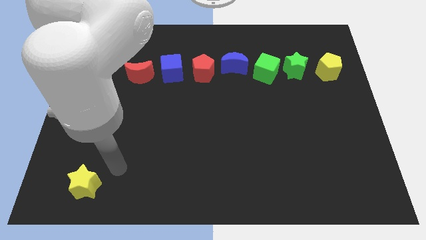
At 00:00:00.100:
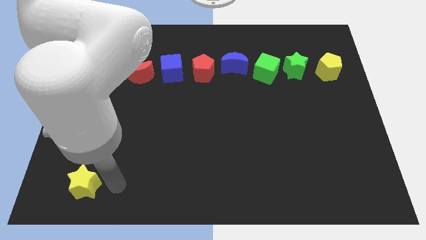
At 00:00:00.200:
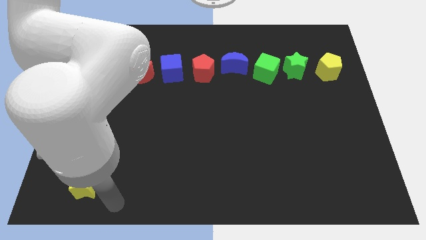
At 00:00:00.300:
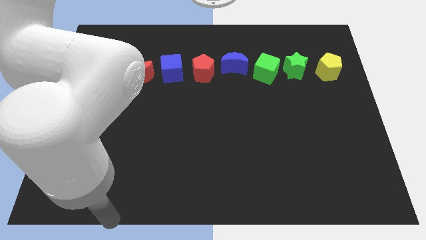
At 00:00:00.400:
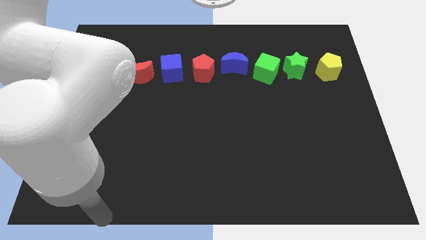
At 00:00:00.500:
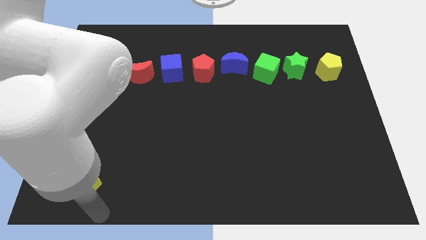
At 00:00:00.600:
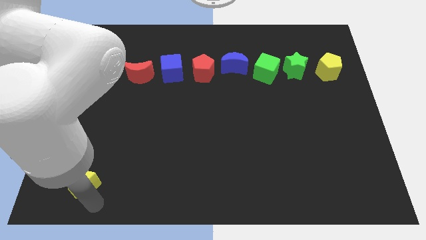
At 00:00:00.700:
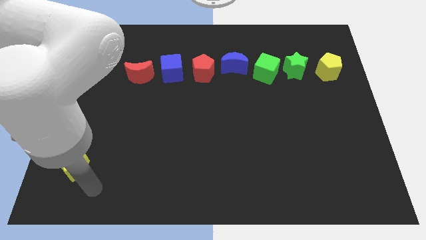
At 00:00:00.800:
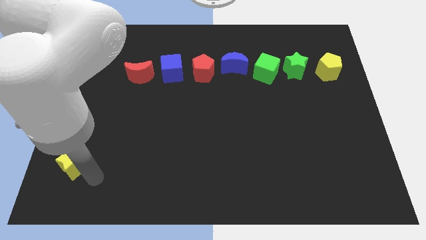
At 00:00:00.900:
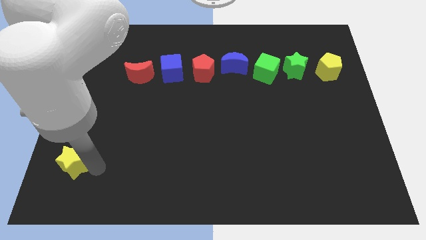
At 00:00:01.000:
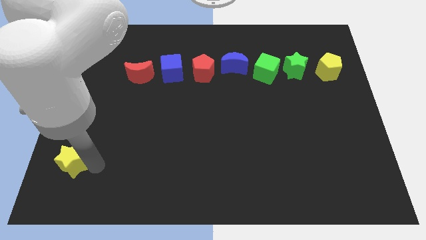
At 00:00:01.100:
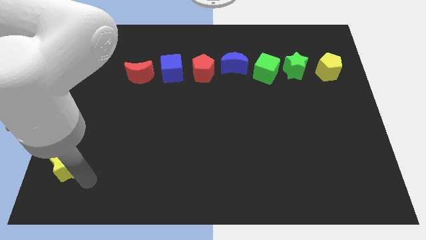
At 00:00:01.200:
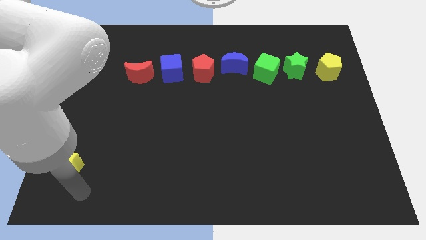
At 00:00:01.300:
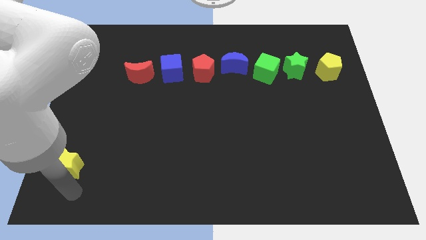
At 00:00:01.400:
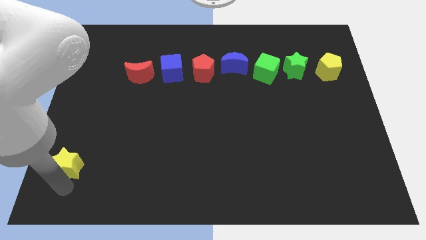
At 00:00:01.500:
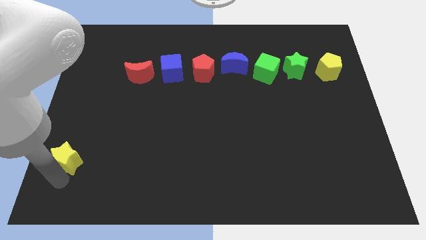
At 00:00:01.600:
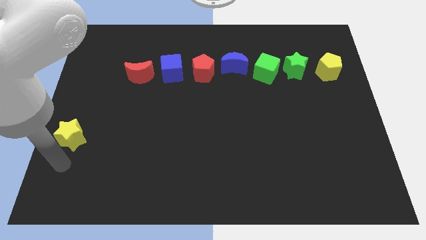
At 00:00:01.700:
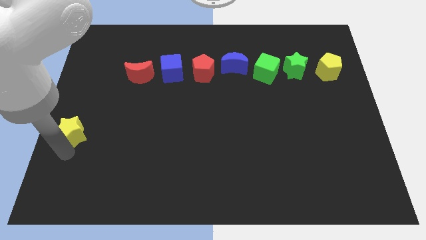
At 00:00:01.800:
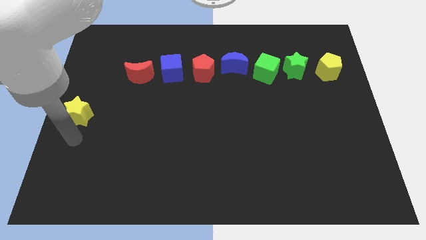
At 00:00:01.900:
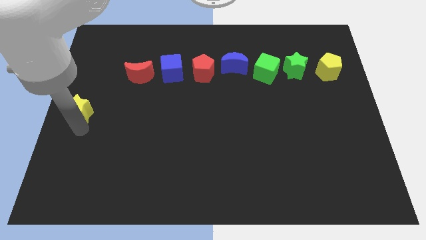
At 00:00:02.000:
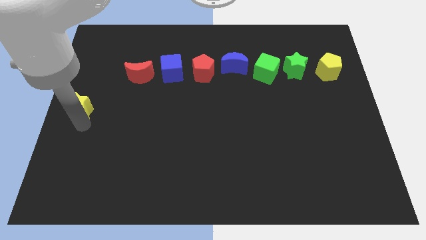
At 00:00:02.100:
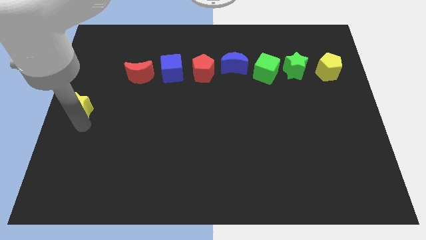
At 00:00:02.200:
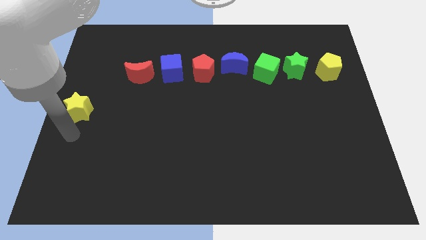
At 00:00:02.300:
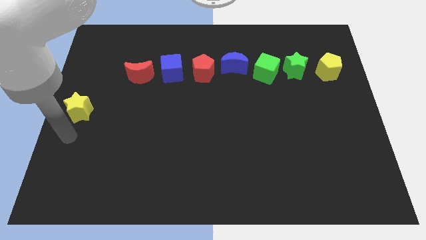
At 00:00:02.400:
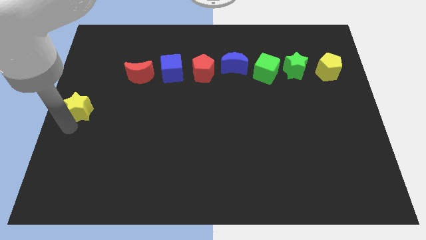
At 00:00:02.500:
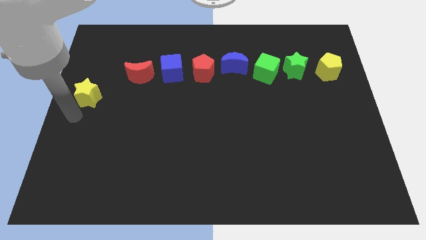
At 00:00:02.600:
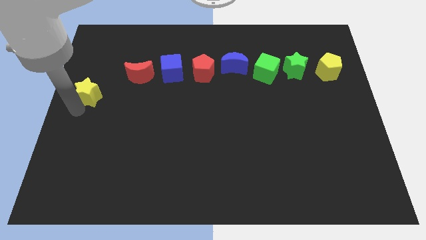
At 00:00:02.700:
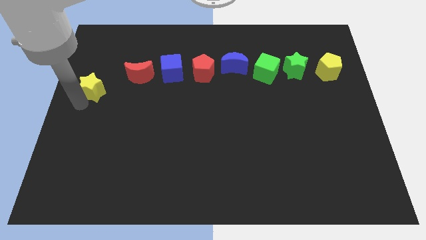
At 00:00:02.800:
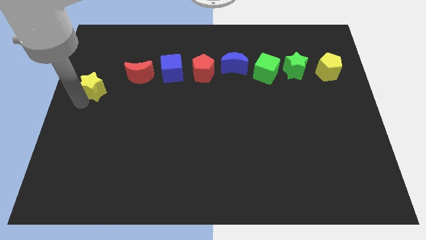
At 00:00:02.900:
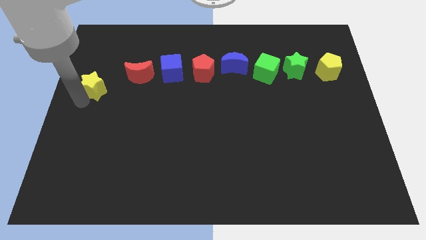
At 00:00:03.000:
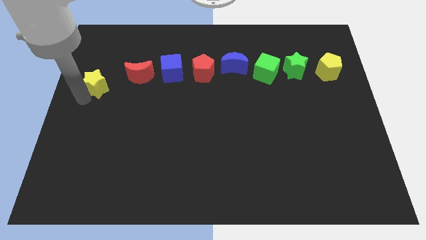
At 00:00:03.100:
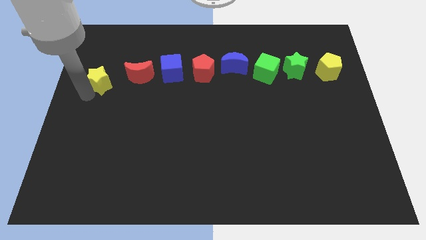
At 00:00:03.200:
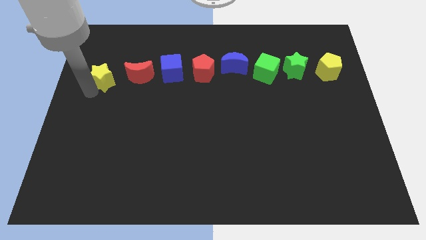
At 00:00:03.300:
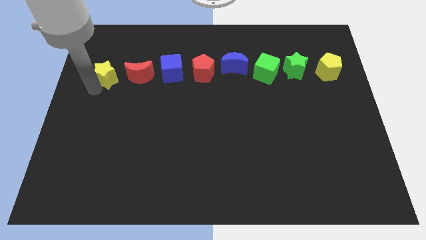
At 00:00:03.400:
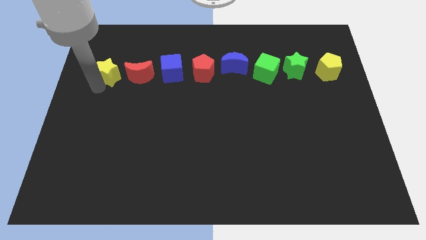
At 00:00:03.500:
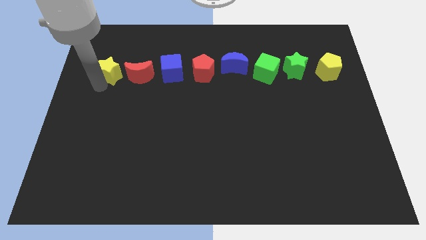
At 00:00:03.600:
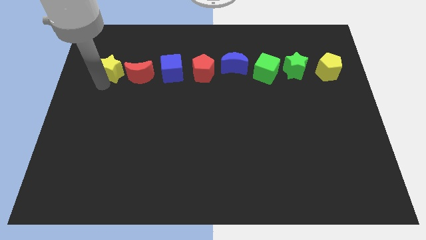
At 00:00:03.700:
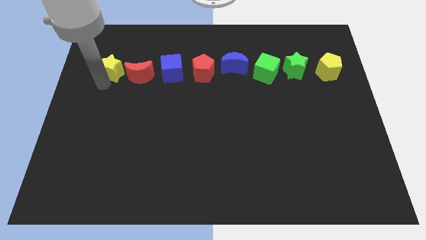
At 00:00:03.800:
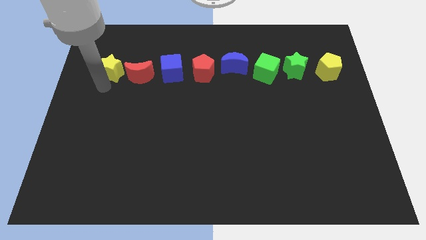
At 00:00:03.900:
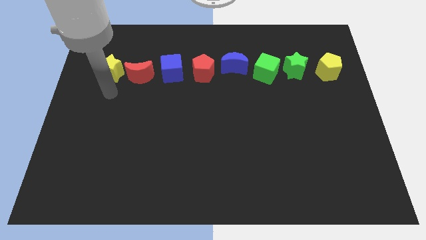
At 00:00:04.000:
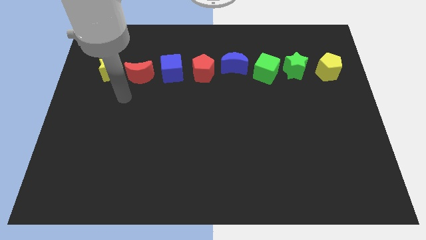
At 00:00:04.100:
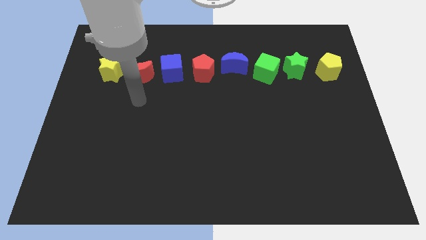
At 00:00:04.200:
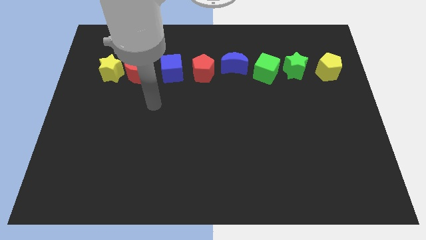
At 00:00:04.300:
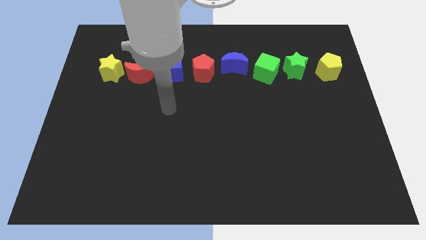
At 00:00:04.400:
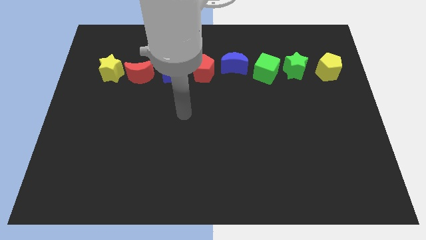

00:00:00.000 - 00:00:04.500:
place the yellow star left to the red moon

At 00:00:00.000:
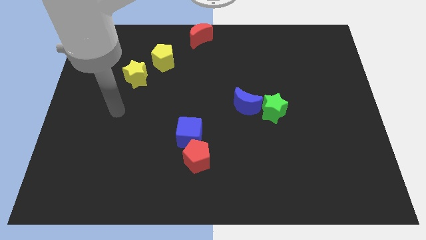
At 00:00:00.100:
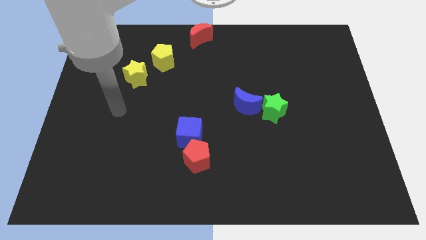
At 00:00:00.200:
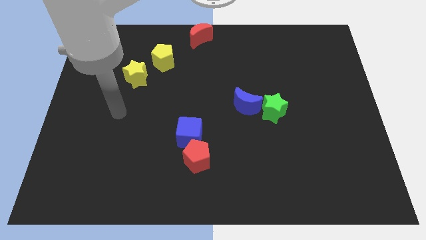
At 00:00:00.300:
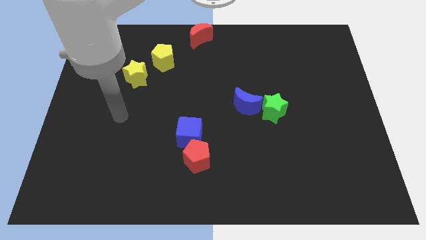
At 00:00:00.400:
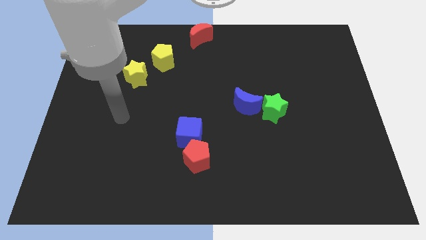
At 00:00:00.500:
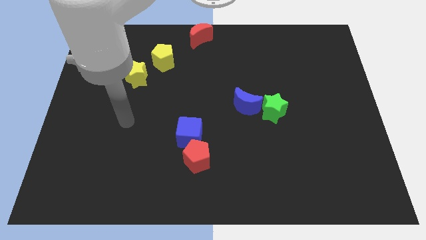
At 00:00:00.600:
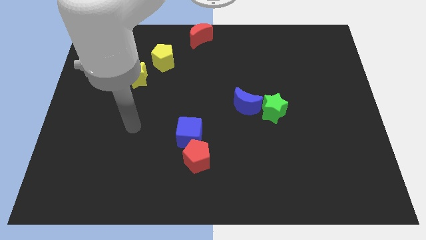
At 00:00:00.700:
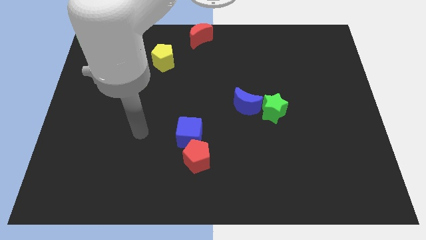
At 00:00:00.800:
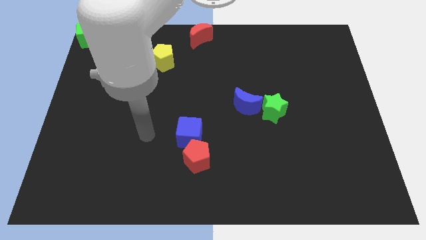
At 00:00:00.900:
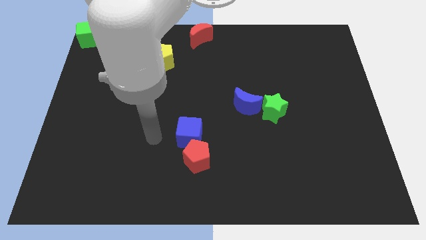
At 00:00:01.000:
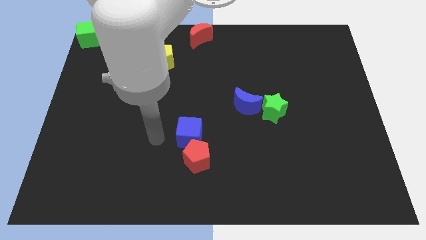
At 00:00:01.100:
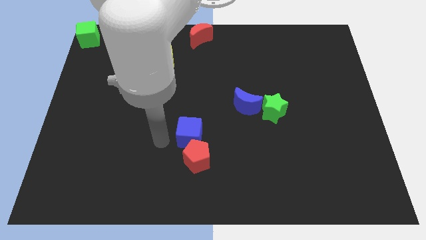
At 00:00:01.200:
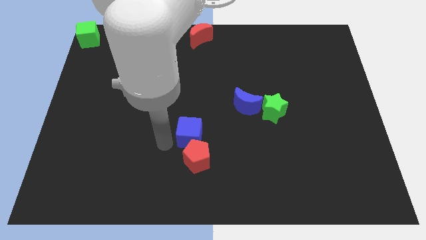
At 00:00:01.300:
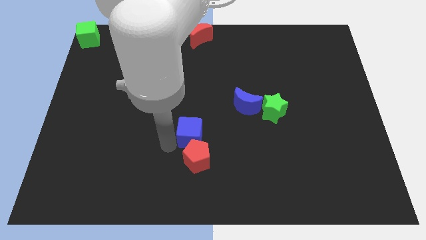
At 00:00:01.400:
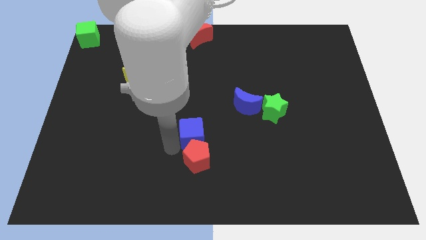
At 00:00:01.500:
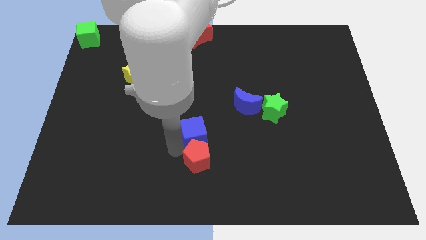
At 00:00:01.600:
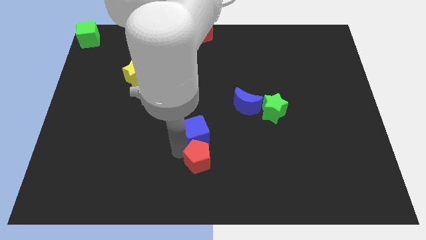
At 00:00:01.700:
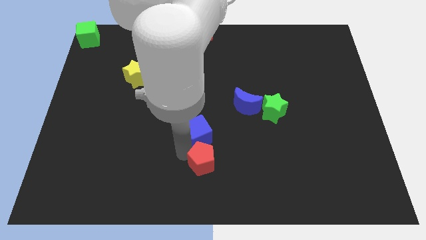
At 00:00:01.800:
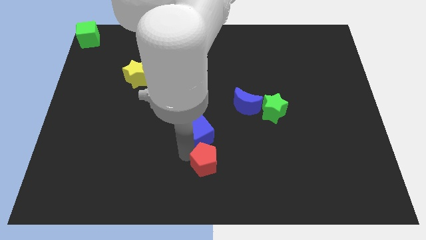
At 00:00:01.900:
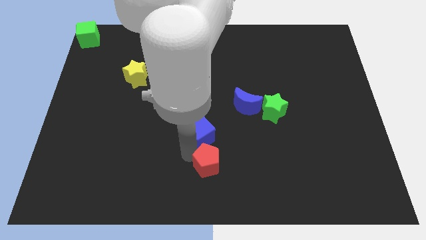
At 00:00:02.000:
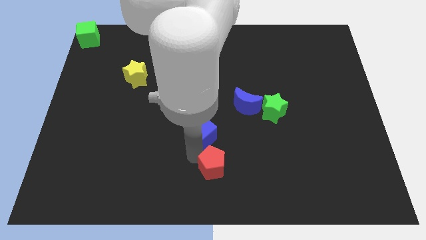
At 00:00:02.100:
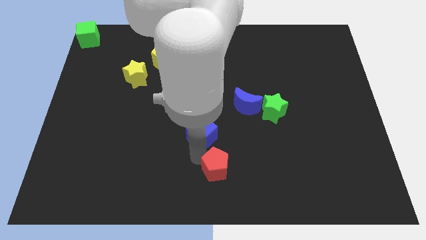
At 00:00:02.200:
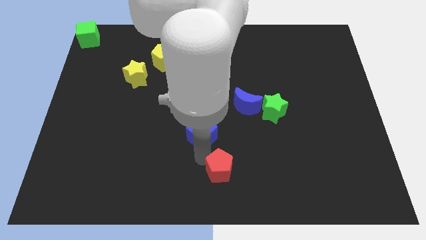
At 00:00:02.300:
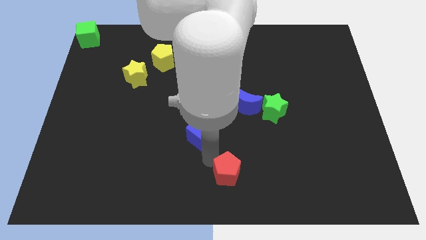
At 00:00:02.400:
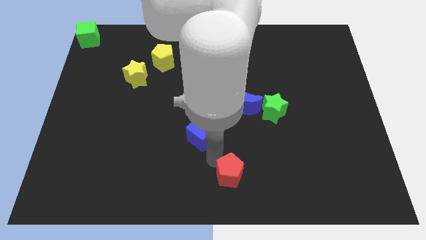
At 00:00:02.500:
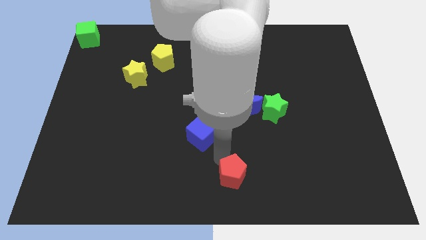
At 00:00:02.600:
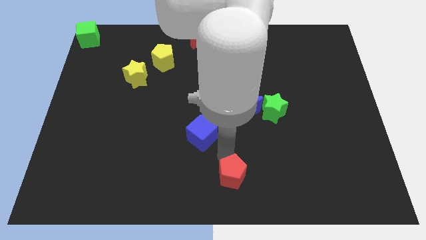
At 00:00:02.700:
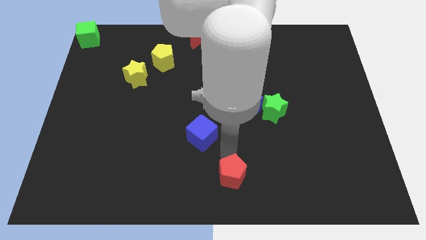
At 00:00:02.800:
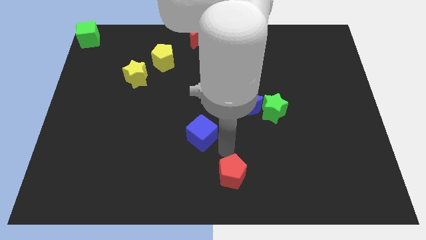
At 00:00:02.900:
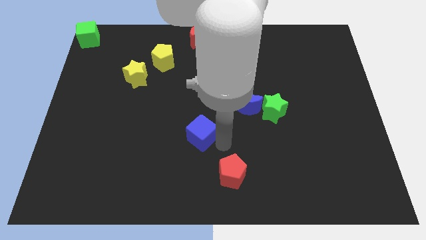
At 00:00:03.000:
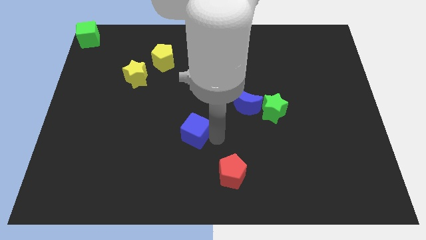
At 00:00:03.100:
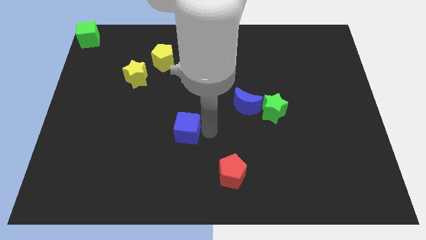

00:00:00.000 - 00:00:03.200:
separate the blue cube and the red pentagon

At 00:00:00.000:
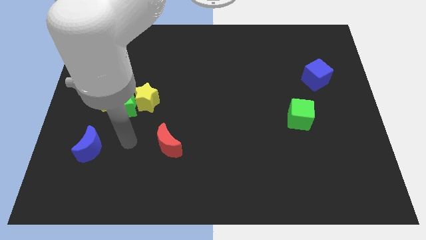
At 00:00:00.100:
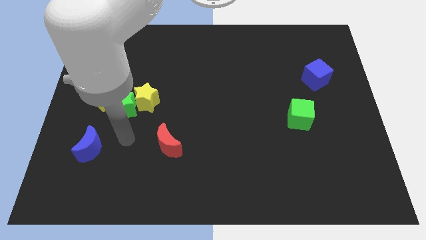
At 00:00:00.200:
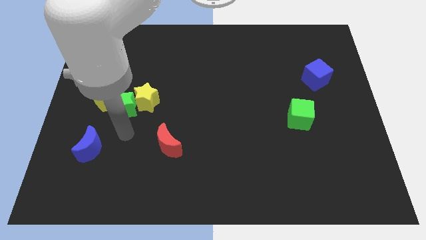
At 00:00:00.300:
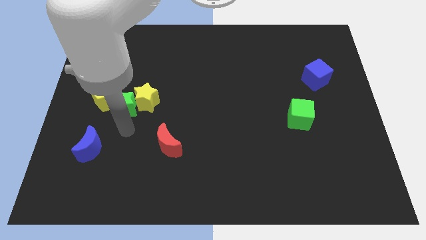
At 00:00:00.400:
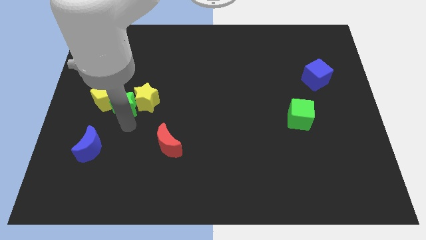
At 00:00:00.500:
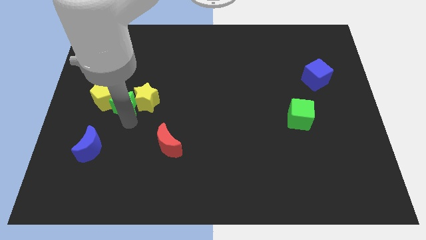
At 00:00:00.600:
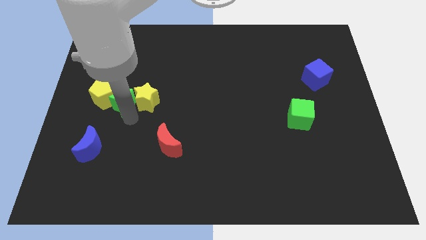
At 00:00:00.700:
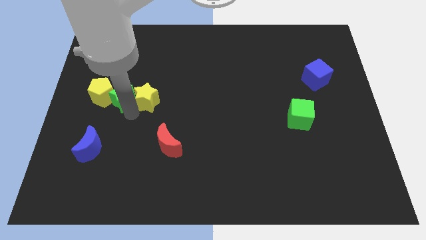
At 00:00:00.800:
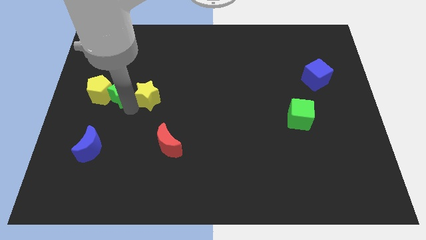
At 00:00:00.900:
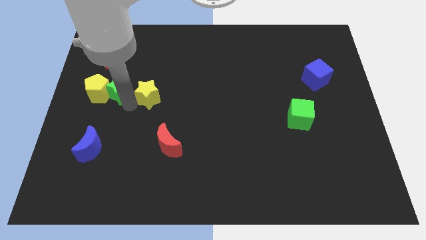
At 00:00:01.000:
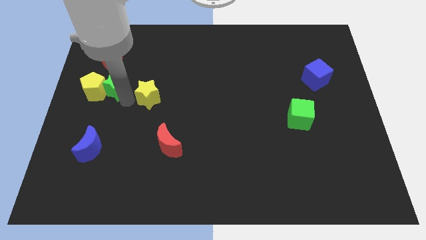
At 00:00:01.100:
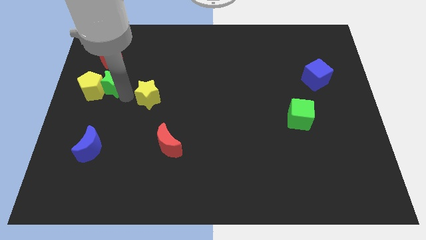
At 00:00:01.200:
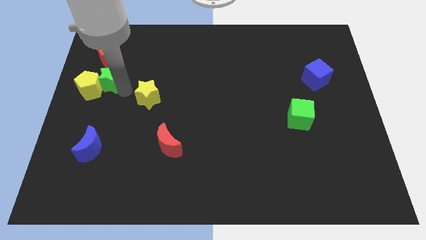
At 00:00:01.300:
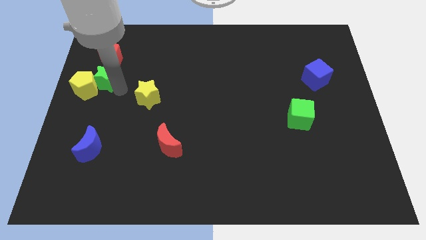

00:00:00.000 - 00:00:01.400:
separate the green star and yellow pentagon from the yellow star
